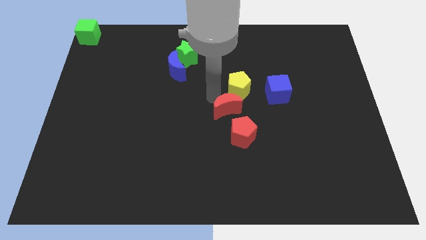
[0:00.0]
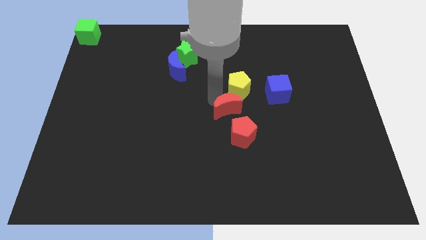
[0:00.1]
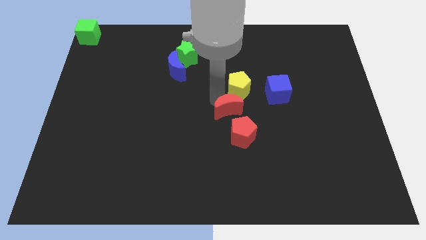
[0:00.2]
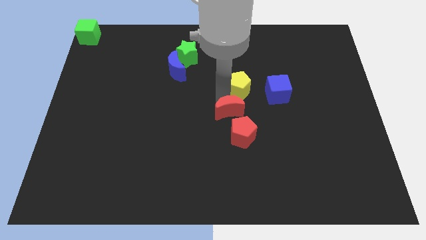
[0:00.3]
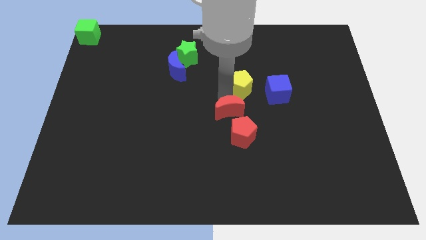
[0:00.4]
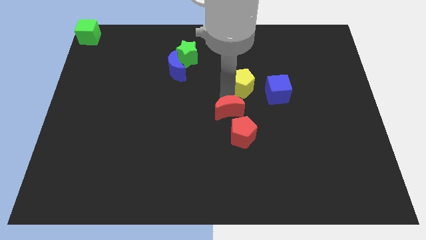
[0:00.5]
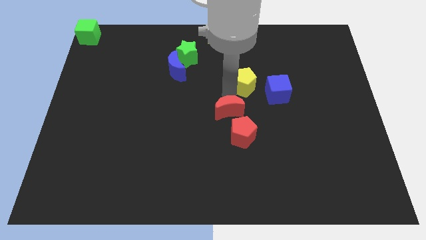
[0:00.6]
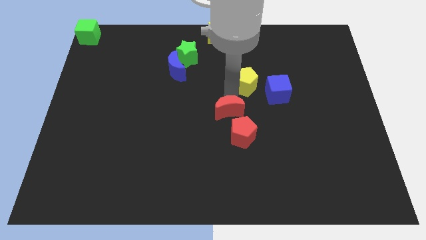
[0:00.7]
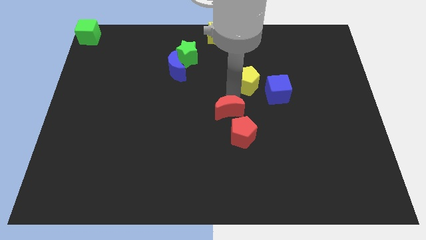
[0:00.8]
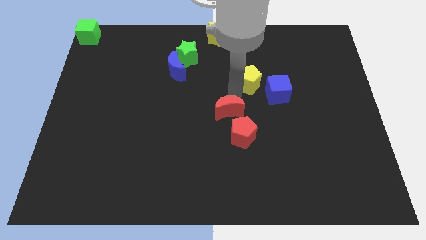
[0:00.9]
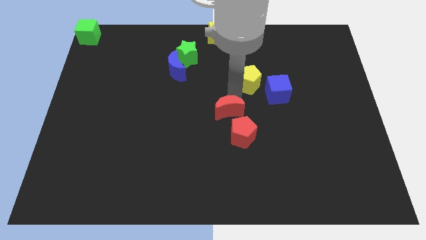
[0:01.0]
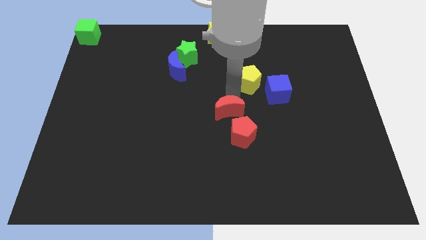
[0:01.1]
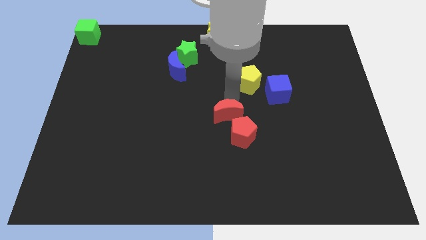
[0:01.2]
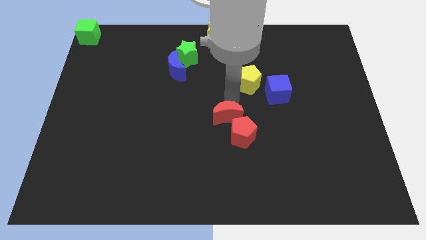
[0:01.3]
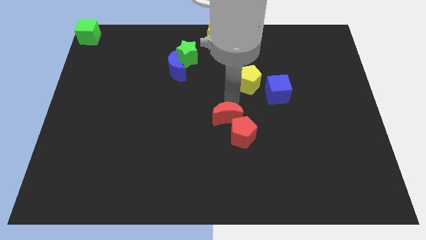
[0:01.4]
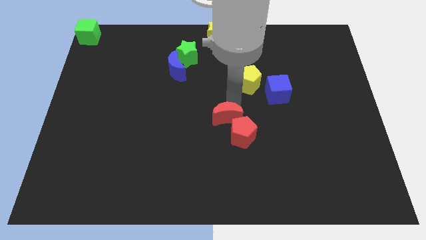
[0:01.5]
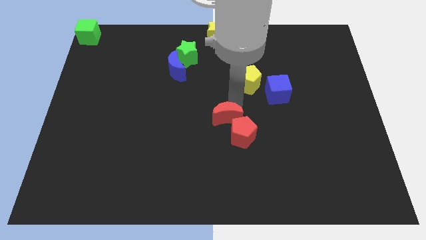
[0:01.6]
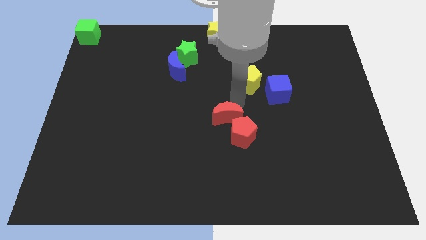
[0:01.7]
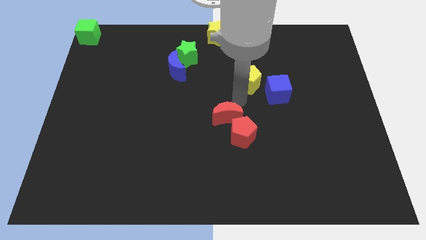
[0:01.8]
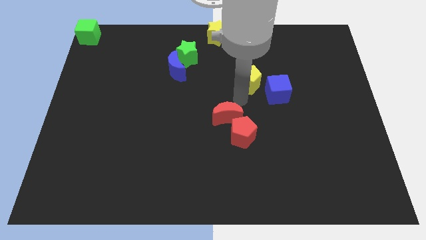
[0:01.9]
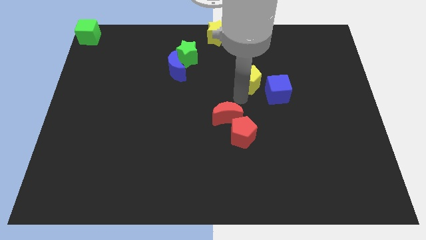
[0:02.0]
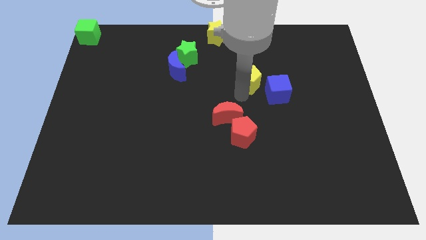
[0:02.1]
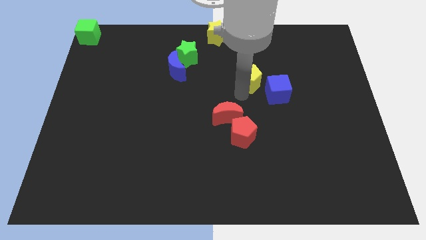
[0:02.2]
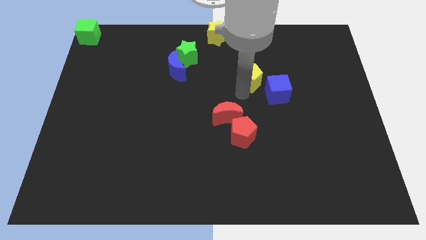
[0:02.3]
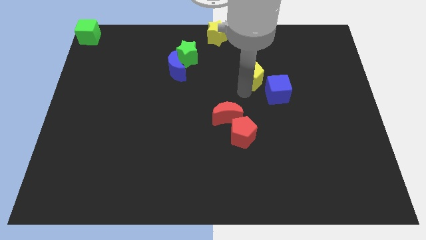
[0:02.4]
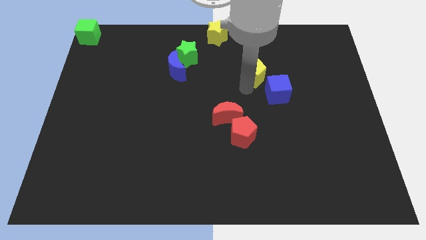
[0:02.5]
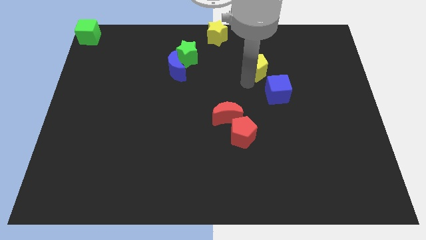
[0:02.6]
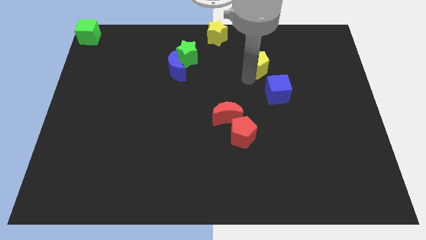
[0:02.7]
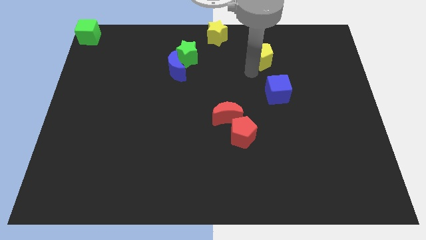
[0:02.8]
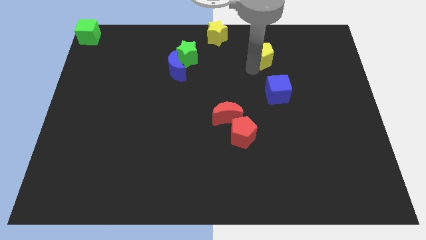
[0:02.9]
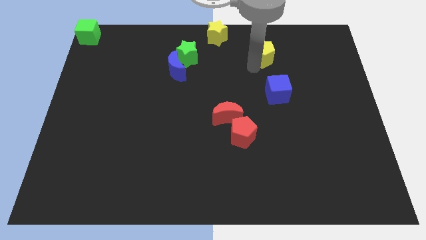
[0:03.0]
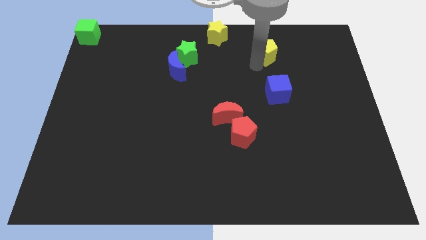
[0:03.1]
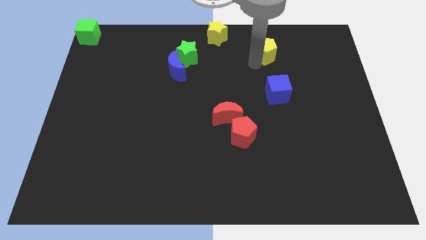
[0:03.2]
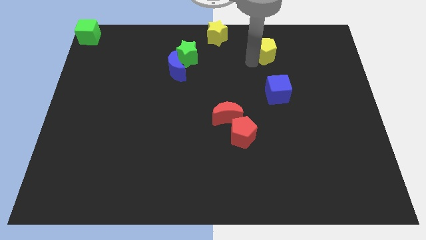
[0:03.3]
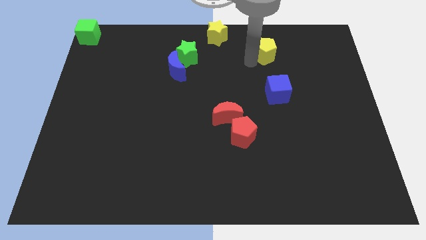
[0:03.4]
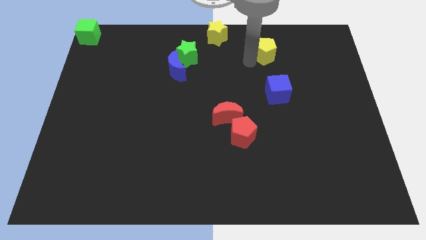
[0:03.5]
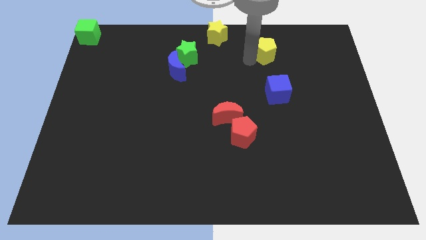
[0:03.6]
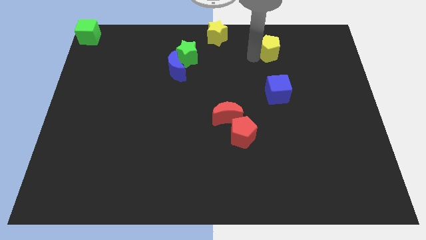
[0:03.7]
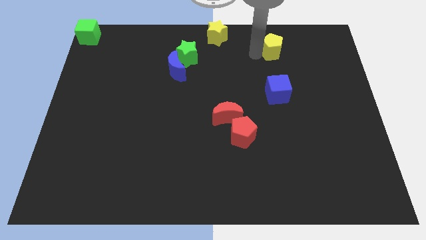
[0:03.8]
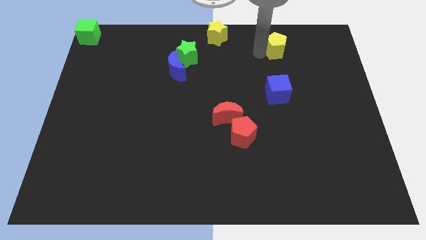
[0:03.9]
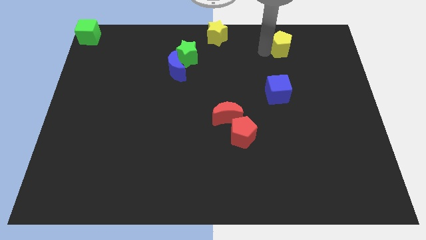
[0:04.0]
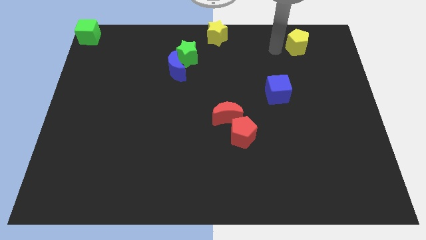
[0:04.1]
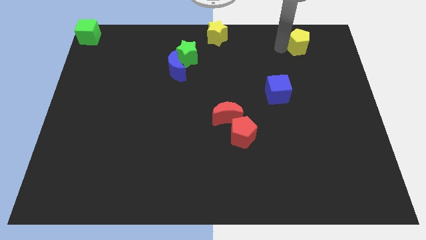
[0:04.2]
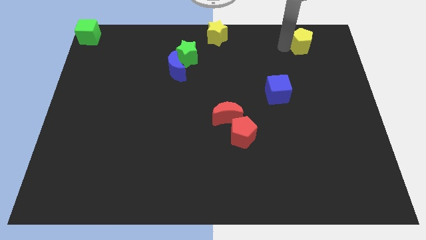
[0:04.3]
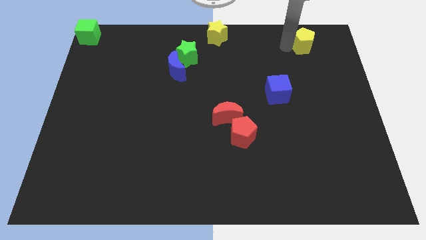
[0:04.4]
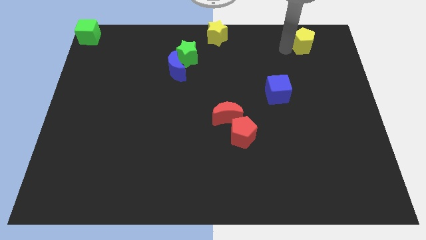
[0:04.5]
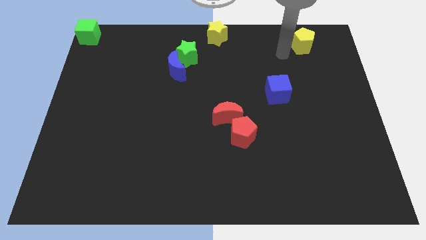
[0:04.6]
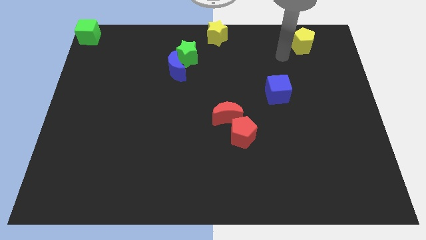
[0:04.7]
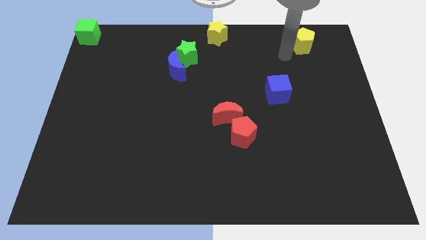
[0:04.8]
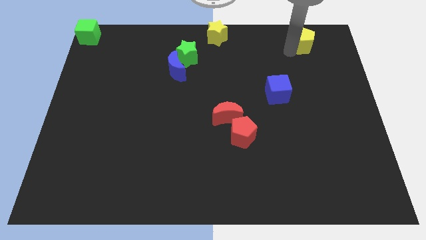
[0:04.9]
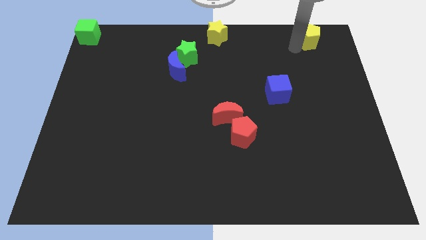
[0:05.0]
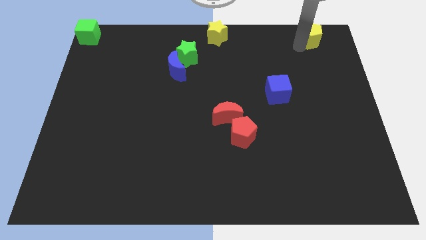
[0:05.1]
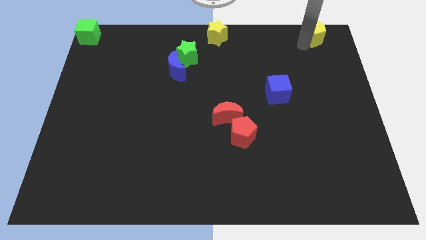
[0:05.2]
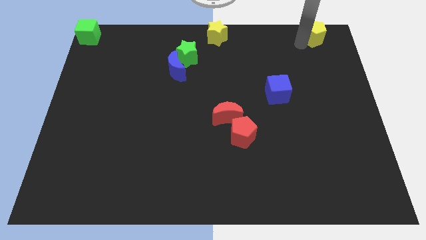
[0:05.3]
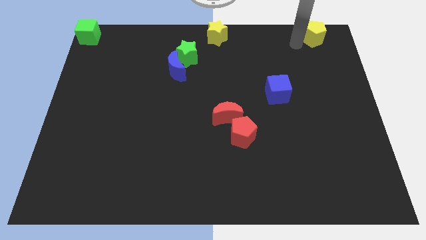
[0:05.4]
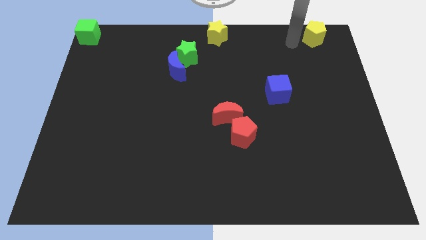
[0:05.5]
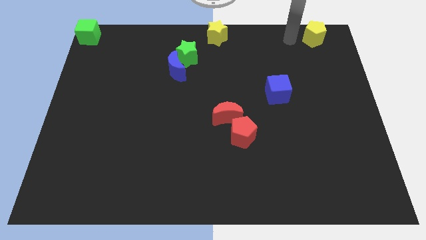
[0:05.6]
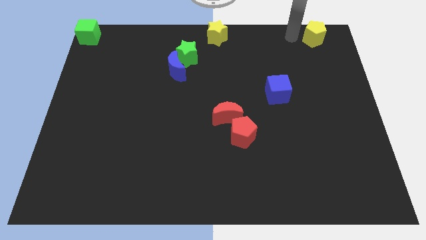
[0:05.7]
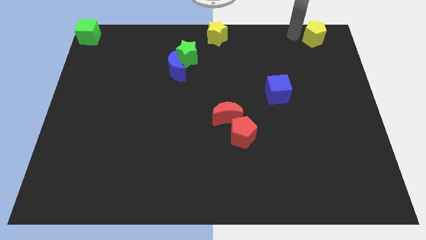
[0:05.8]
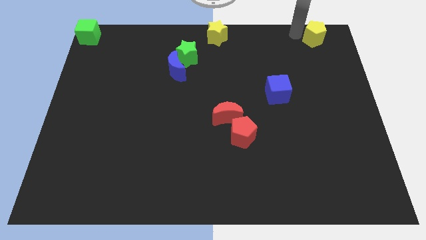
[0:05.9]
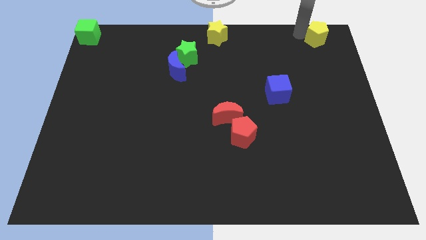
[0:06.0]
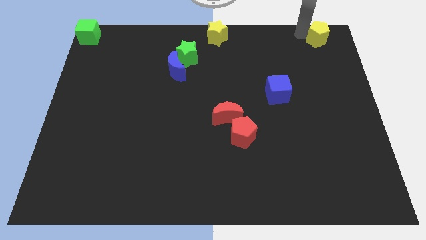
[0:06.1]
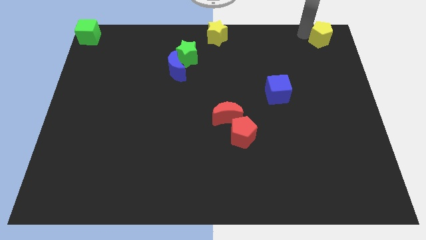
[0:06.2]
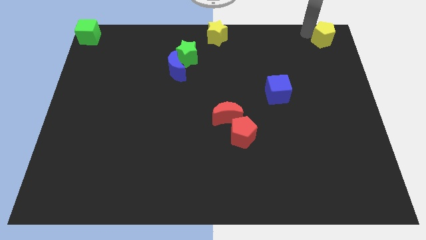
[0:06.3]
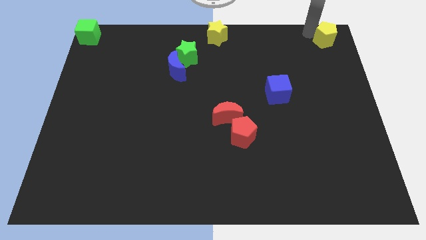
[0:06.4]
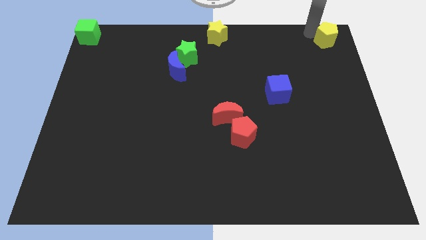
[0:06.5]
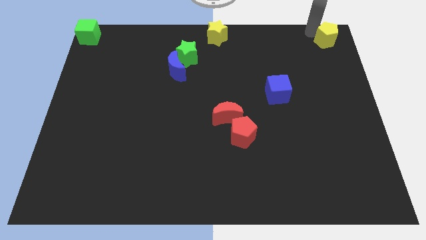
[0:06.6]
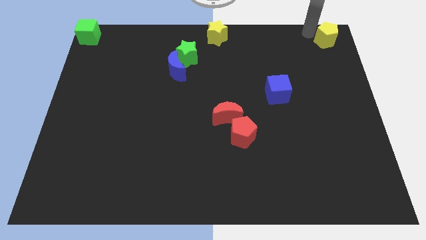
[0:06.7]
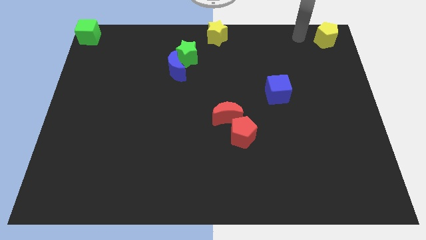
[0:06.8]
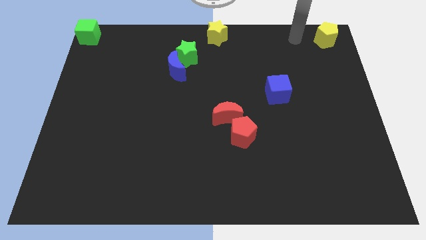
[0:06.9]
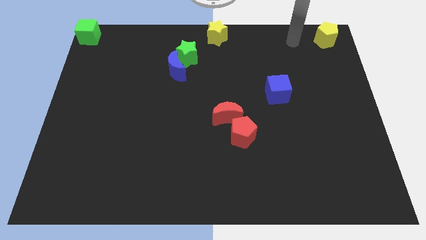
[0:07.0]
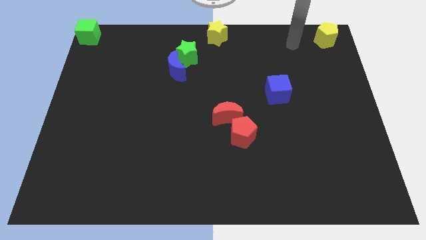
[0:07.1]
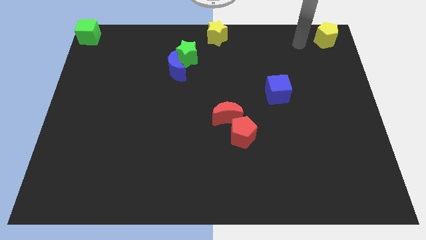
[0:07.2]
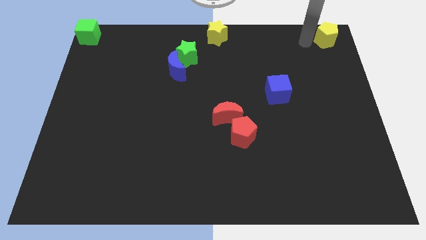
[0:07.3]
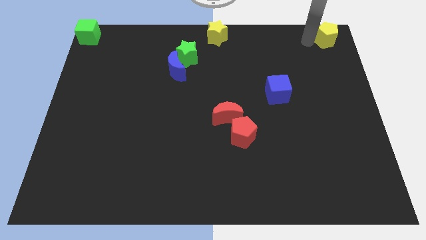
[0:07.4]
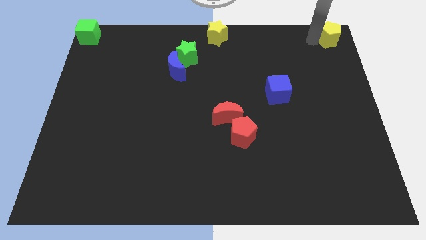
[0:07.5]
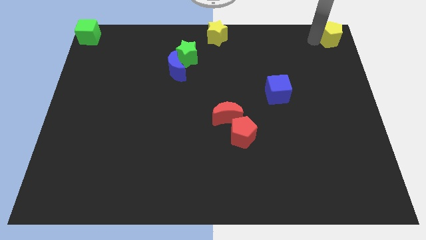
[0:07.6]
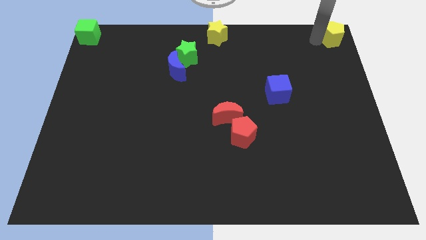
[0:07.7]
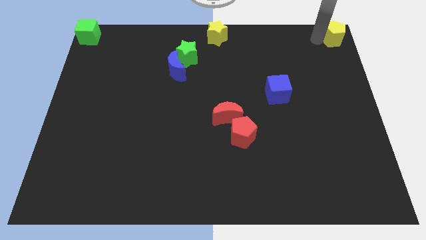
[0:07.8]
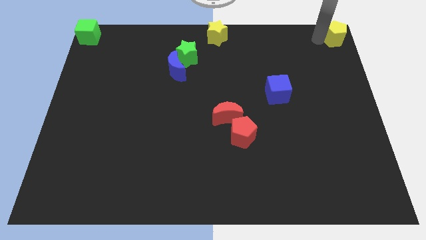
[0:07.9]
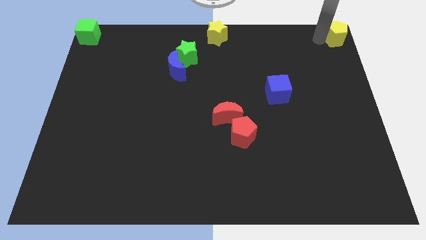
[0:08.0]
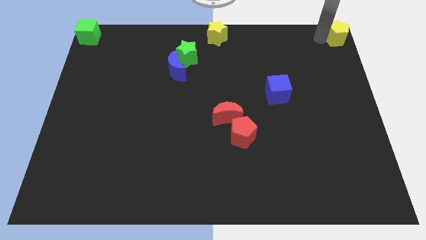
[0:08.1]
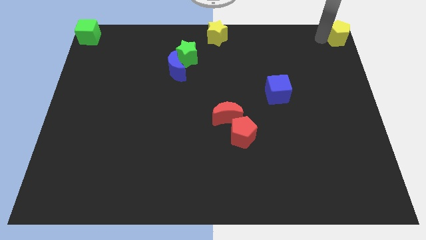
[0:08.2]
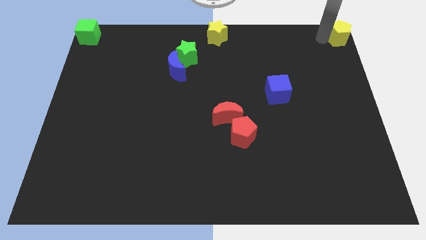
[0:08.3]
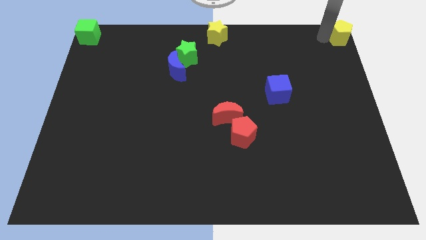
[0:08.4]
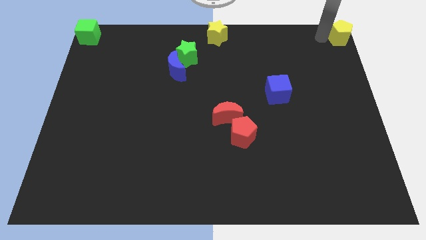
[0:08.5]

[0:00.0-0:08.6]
drag yellow pentagon towards top right side of the board

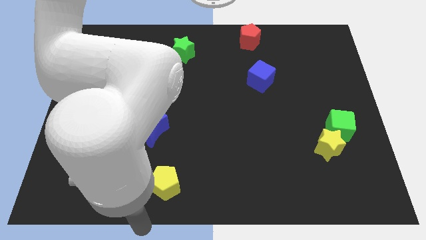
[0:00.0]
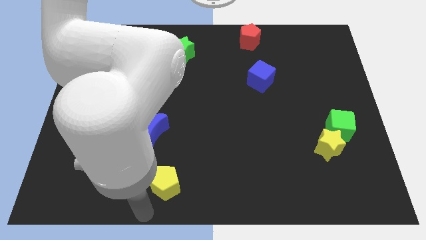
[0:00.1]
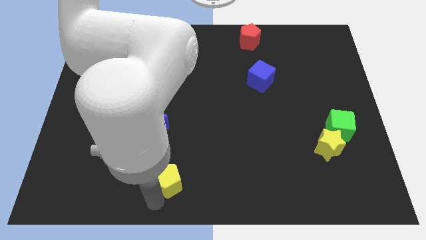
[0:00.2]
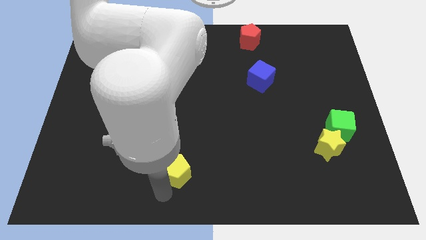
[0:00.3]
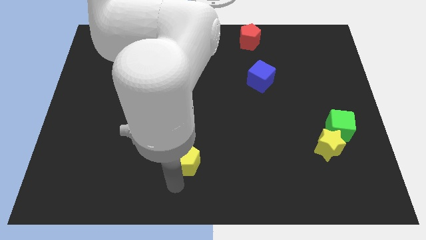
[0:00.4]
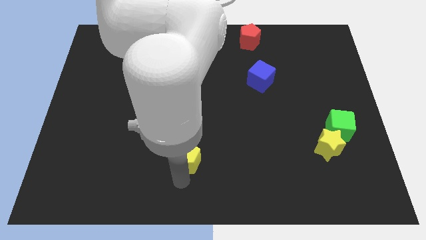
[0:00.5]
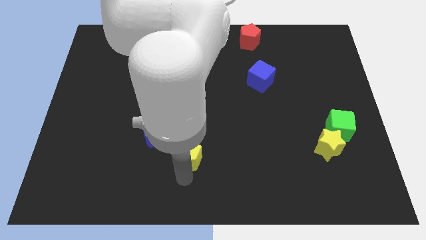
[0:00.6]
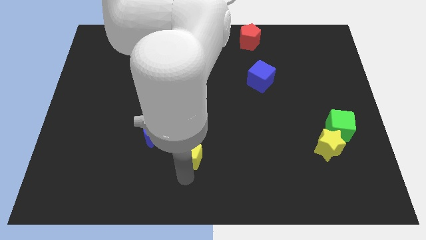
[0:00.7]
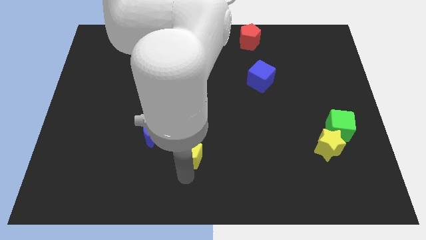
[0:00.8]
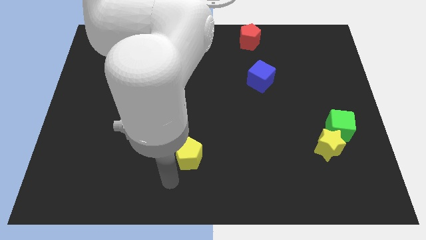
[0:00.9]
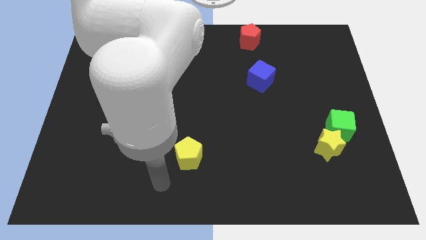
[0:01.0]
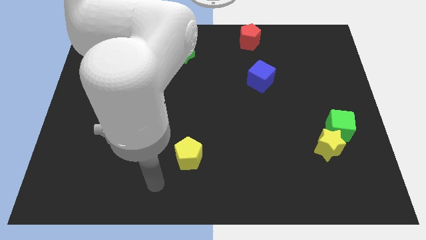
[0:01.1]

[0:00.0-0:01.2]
push the yellow pentagon diagonal to the blue moon
